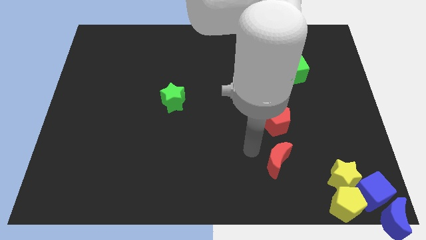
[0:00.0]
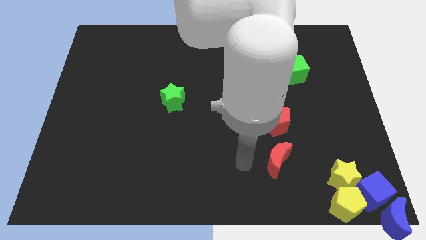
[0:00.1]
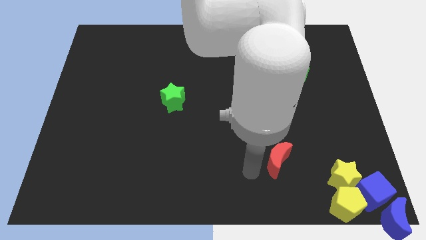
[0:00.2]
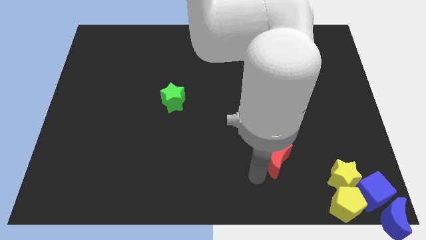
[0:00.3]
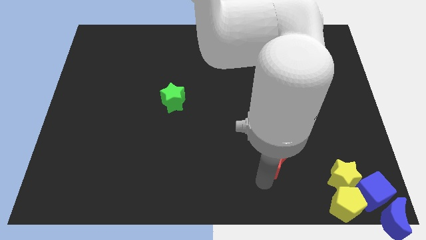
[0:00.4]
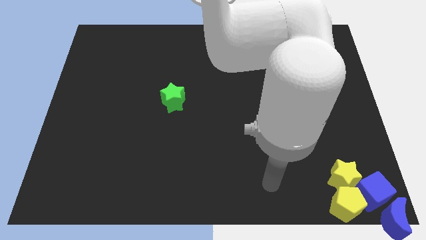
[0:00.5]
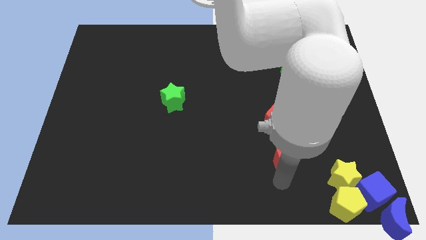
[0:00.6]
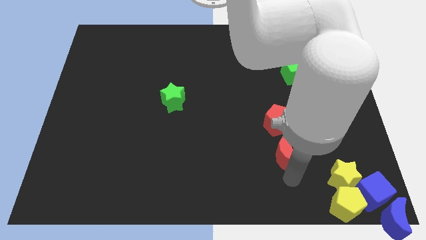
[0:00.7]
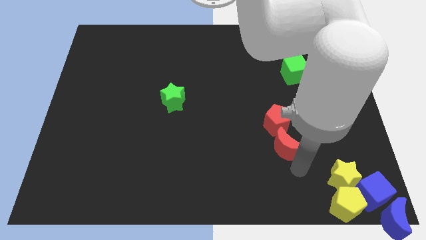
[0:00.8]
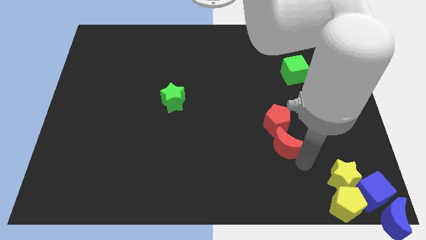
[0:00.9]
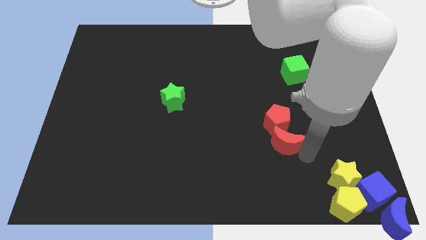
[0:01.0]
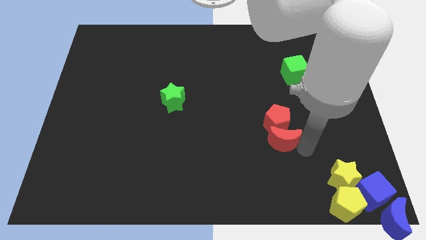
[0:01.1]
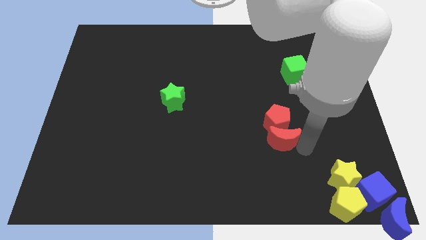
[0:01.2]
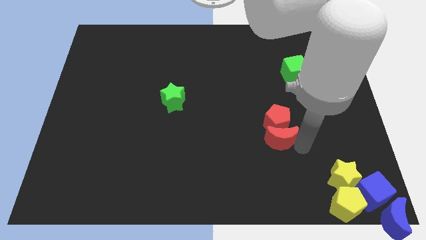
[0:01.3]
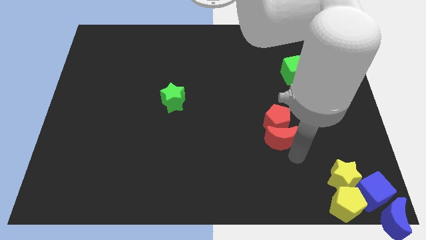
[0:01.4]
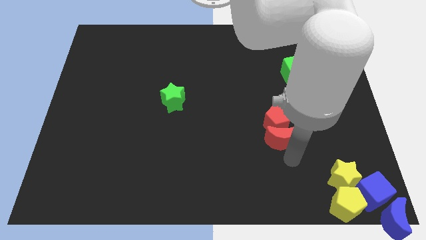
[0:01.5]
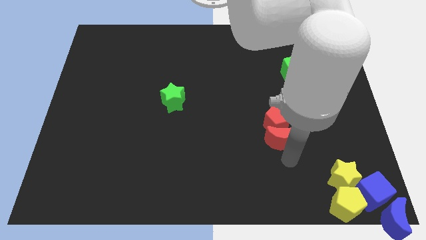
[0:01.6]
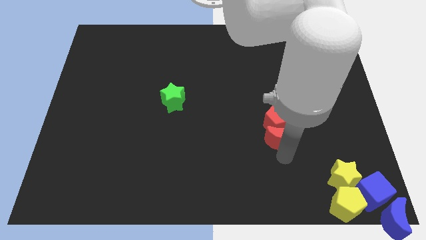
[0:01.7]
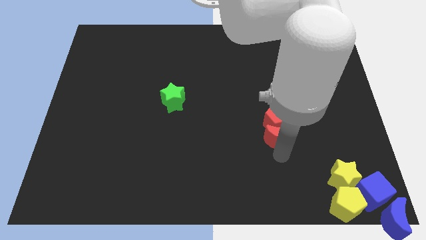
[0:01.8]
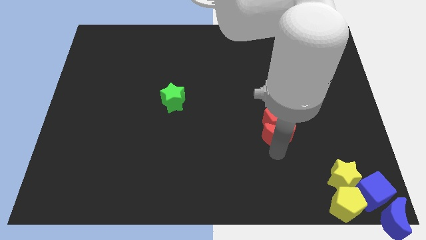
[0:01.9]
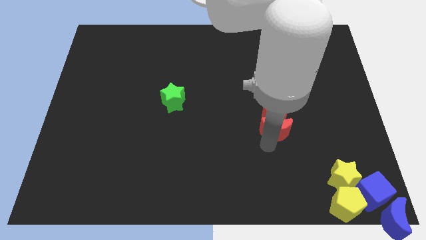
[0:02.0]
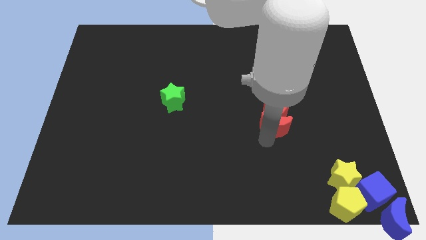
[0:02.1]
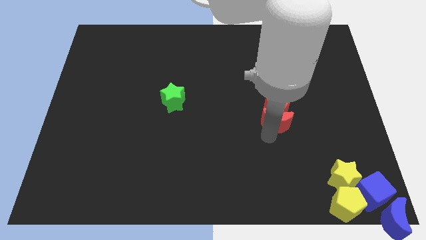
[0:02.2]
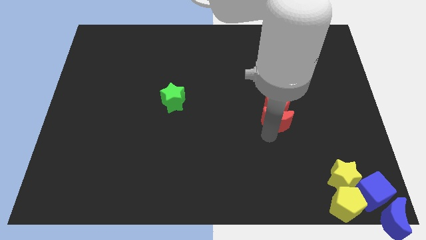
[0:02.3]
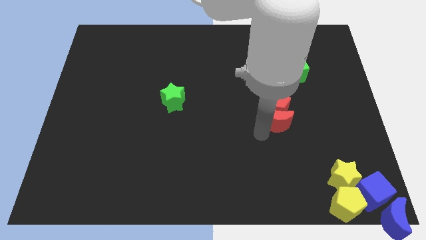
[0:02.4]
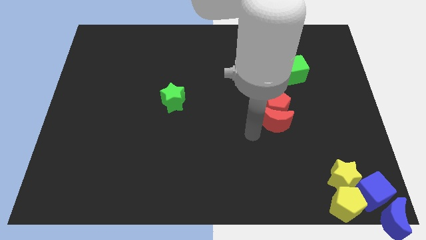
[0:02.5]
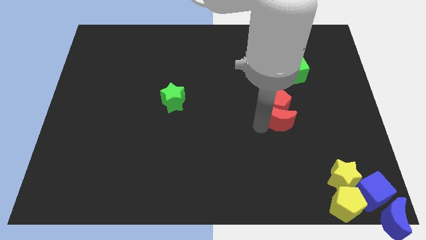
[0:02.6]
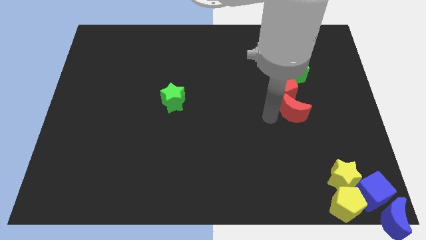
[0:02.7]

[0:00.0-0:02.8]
slightly push the red blocks into the green cube

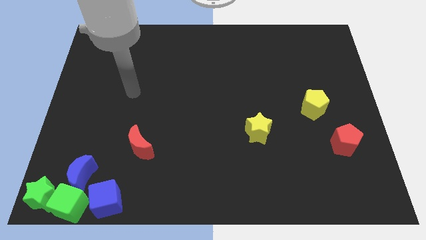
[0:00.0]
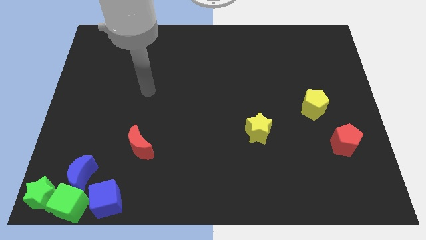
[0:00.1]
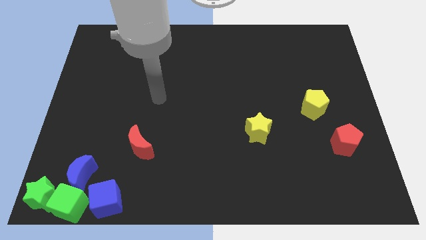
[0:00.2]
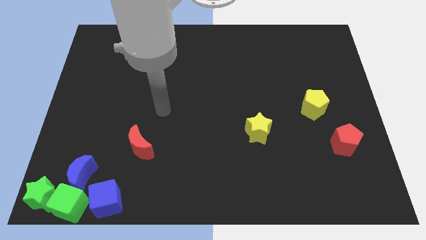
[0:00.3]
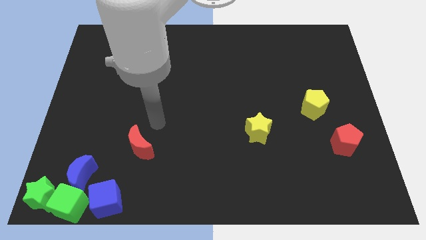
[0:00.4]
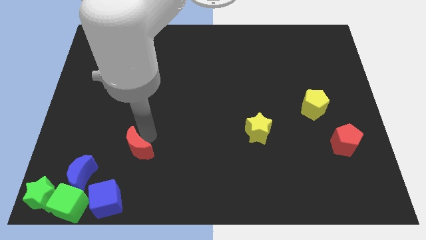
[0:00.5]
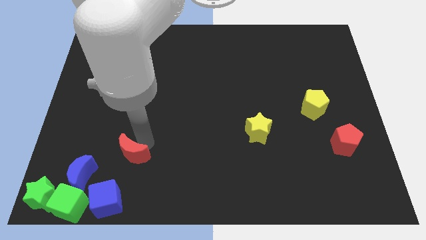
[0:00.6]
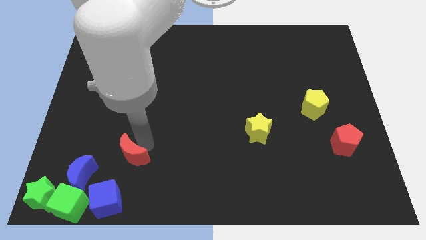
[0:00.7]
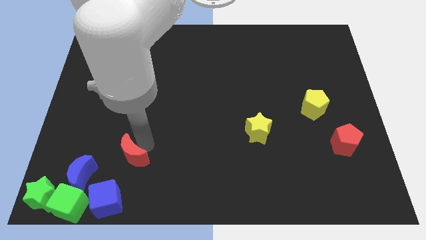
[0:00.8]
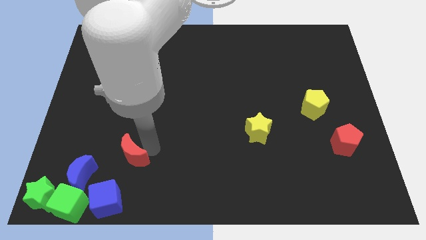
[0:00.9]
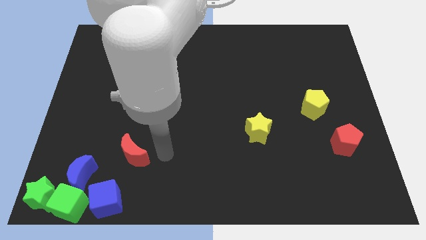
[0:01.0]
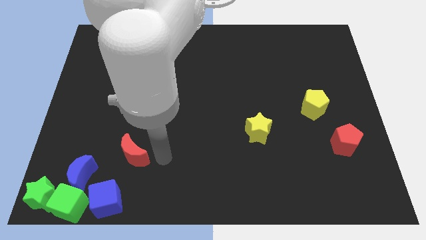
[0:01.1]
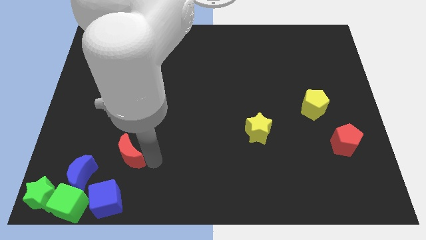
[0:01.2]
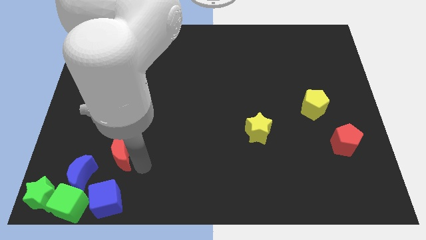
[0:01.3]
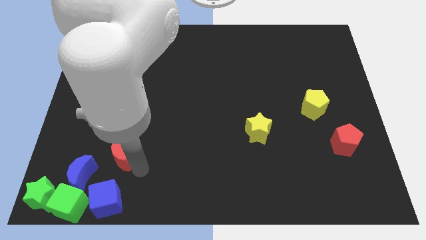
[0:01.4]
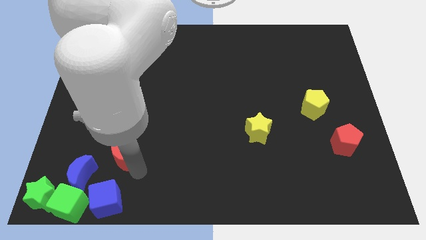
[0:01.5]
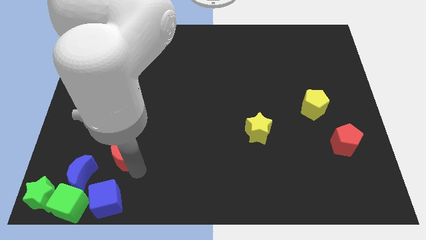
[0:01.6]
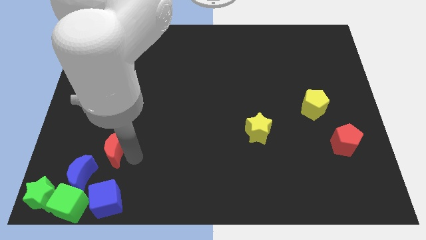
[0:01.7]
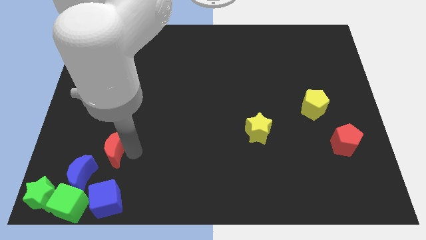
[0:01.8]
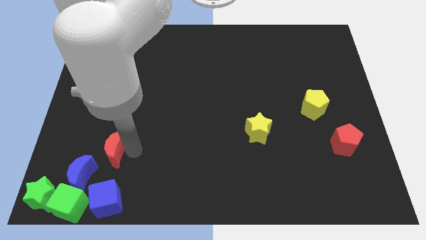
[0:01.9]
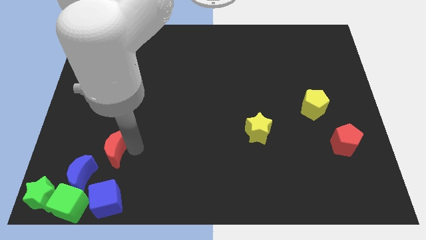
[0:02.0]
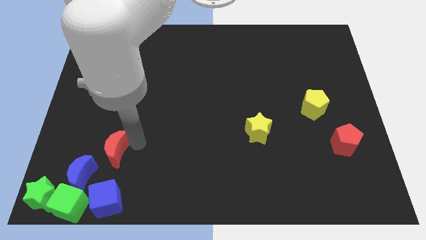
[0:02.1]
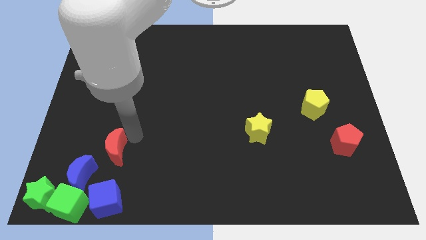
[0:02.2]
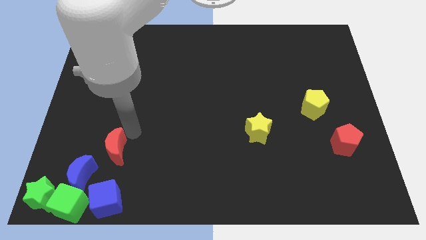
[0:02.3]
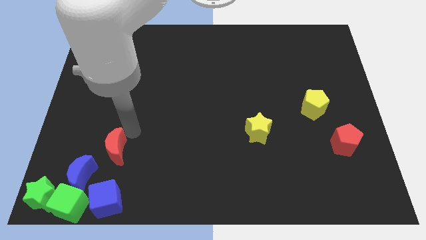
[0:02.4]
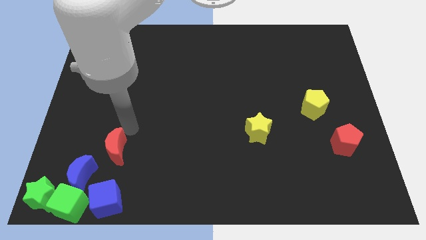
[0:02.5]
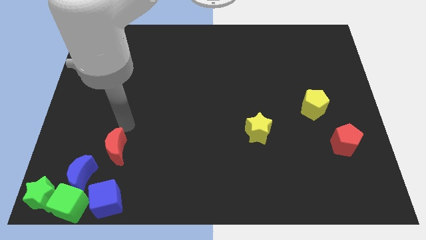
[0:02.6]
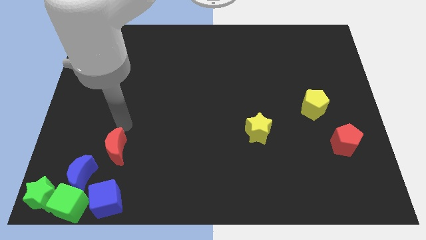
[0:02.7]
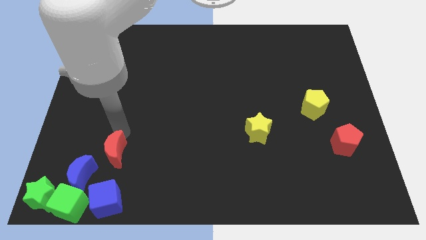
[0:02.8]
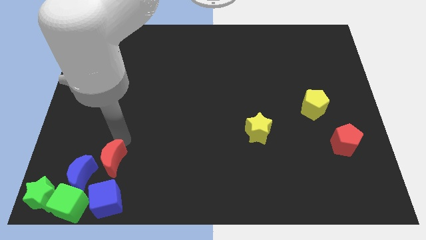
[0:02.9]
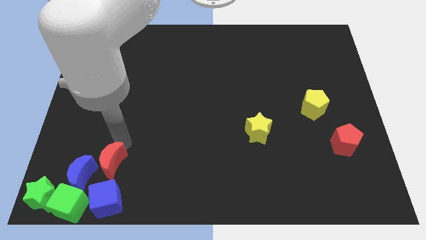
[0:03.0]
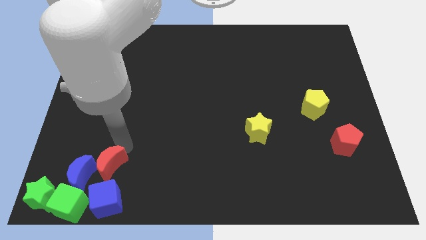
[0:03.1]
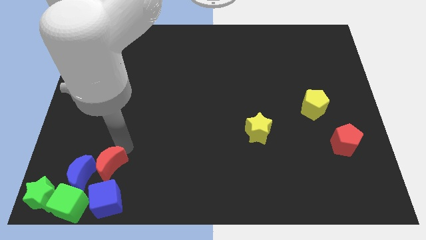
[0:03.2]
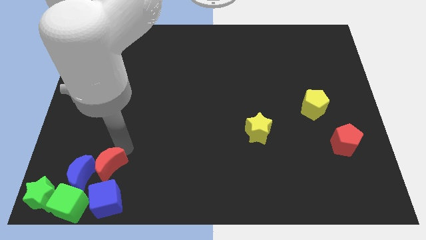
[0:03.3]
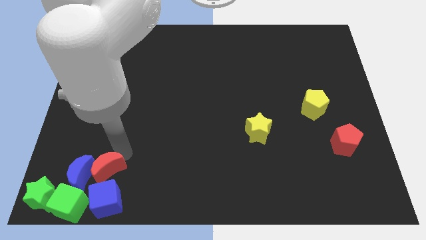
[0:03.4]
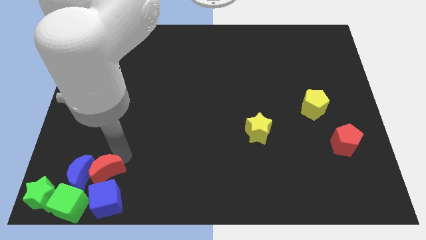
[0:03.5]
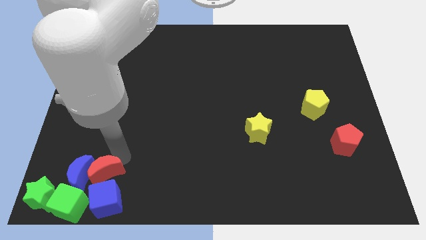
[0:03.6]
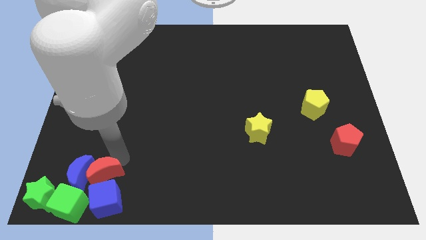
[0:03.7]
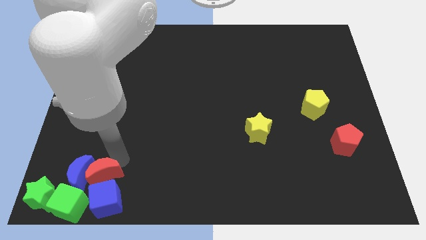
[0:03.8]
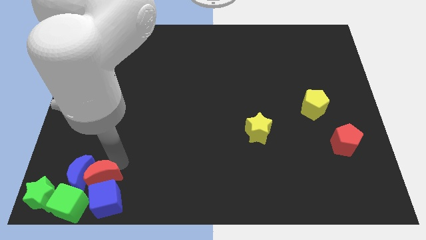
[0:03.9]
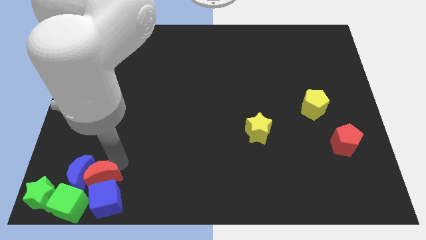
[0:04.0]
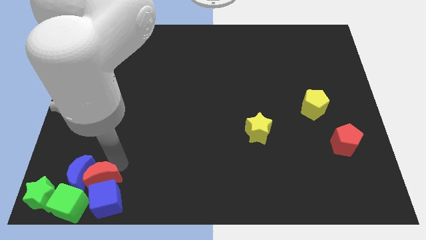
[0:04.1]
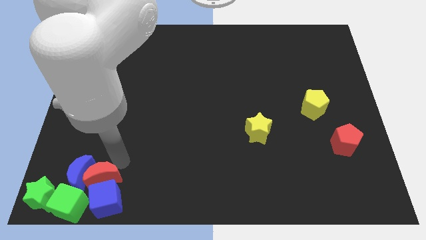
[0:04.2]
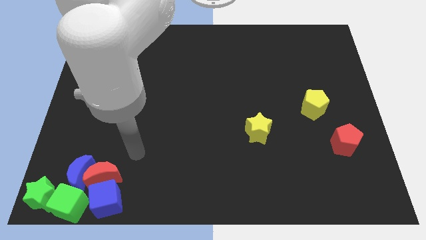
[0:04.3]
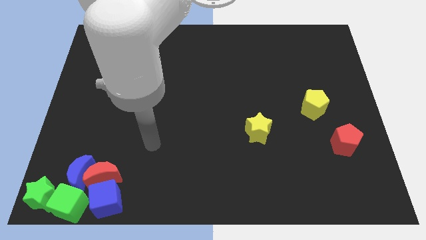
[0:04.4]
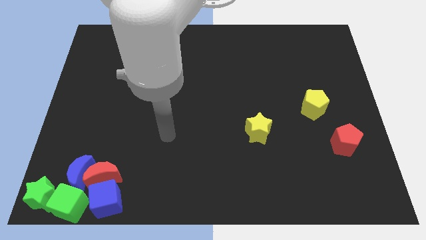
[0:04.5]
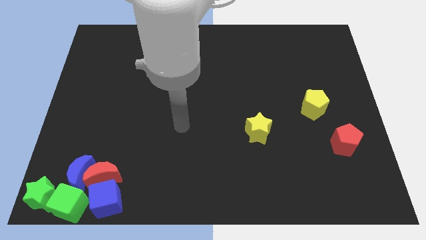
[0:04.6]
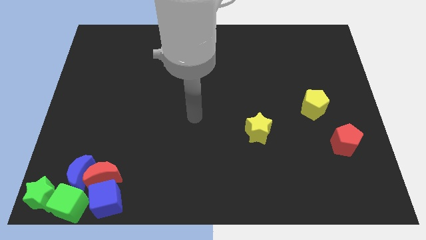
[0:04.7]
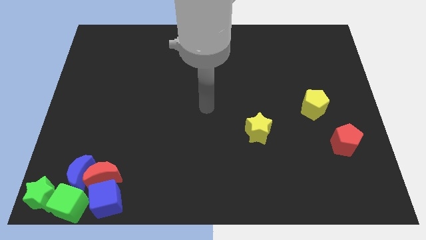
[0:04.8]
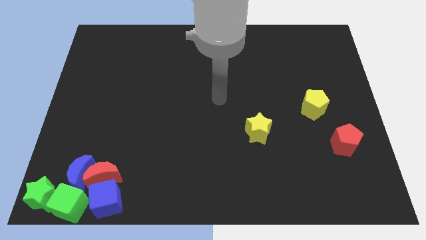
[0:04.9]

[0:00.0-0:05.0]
push the red moon above the blue cube

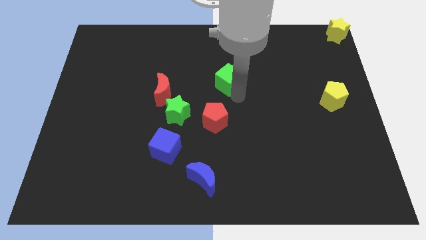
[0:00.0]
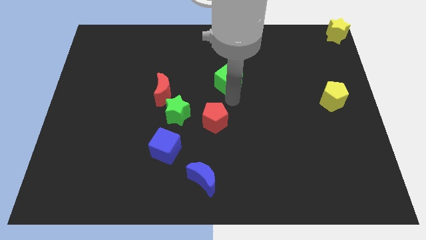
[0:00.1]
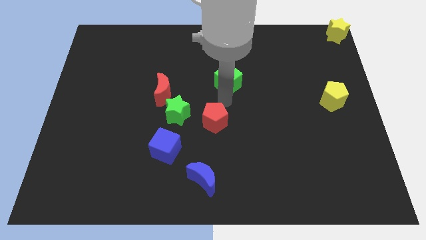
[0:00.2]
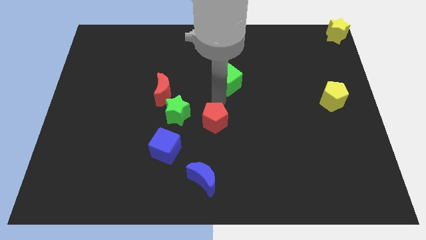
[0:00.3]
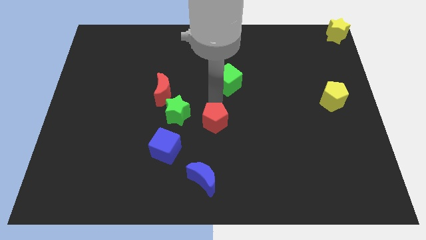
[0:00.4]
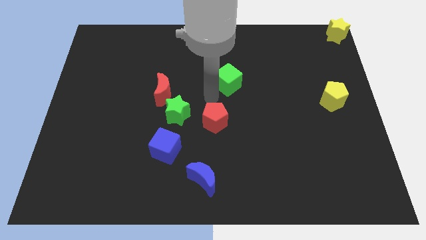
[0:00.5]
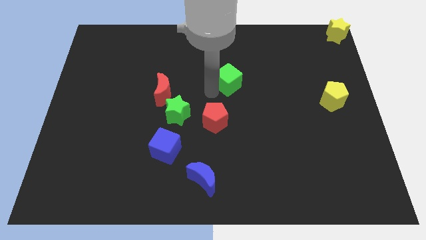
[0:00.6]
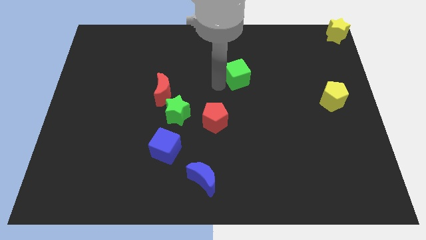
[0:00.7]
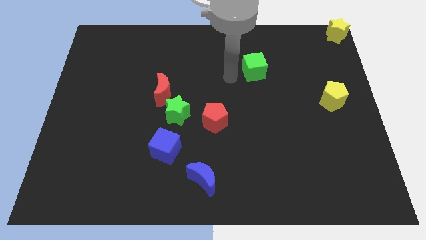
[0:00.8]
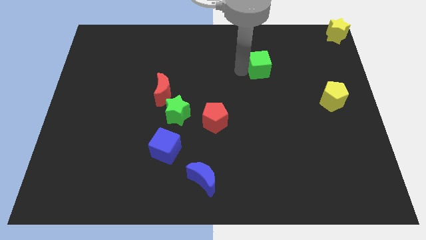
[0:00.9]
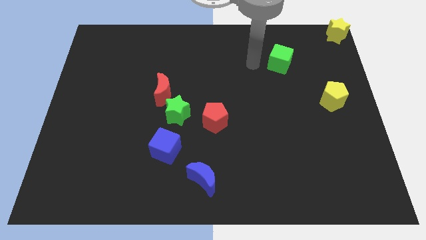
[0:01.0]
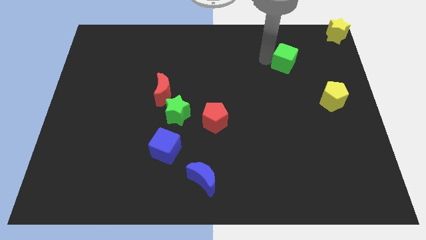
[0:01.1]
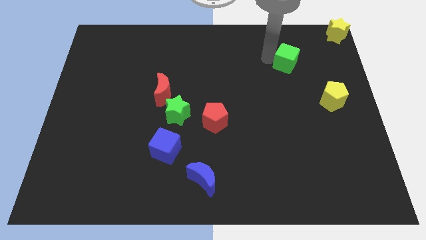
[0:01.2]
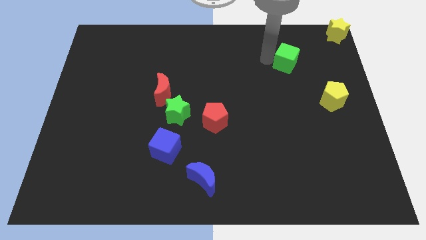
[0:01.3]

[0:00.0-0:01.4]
push the green cube to the right side of the board
